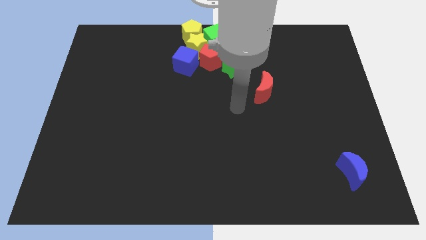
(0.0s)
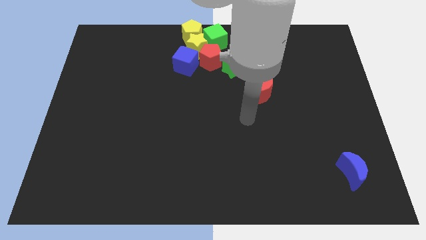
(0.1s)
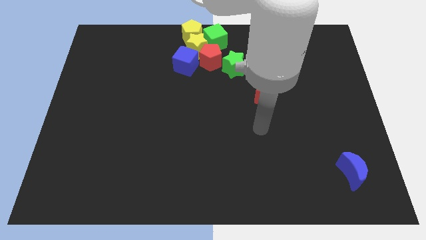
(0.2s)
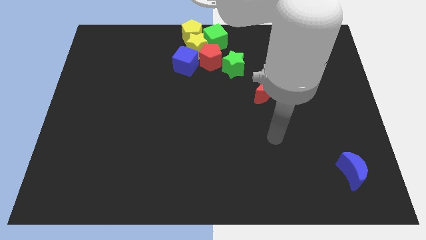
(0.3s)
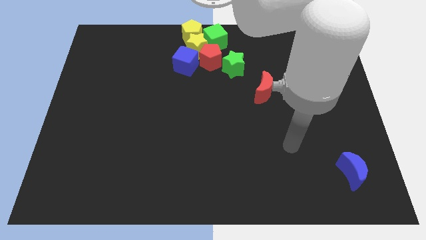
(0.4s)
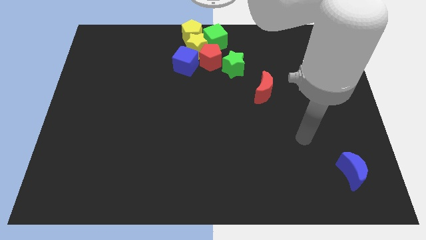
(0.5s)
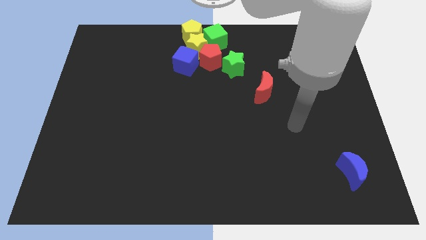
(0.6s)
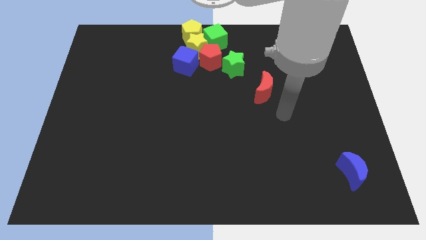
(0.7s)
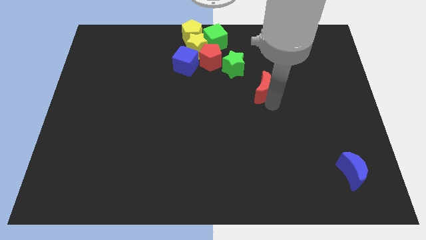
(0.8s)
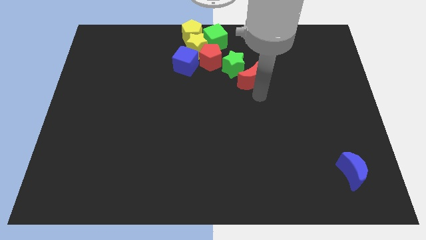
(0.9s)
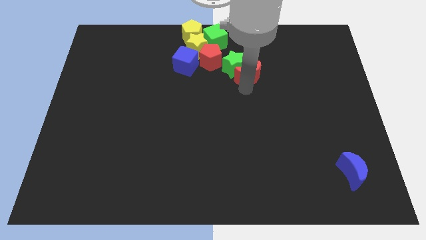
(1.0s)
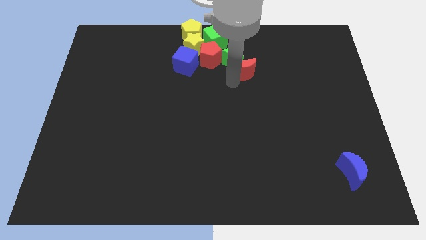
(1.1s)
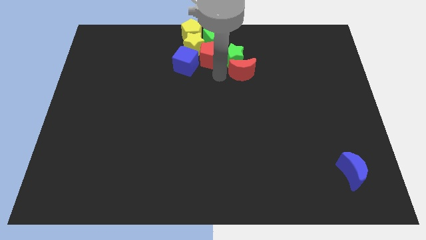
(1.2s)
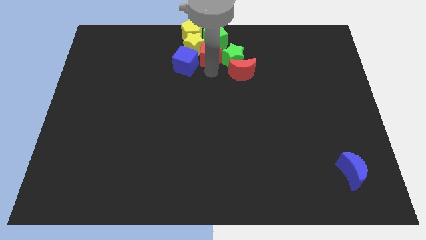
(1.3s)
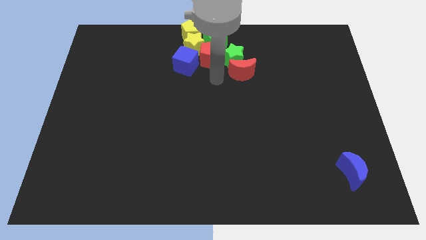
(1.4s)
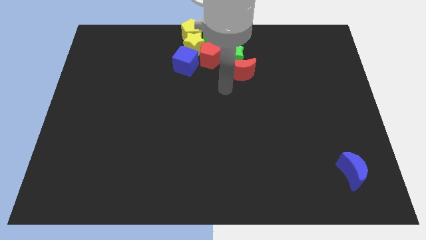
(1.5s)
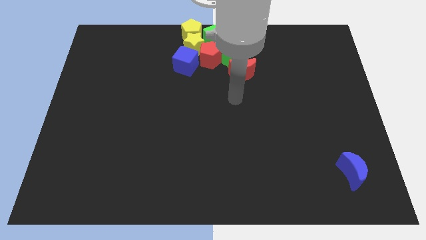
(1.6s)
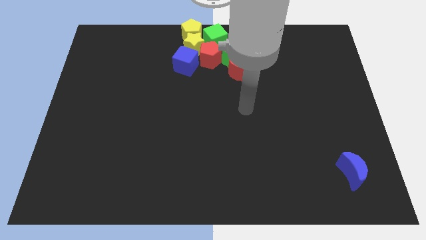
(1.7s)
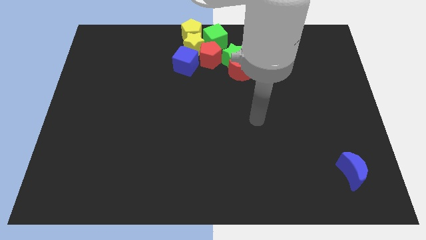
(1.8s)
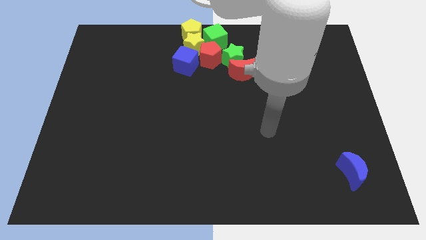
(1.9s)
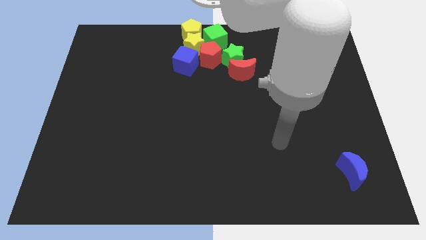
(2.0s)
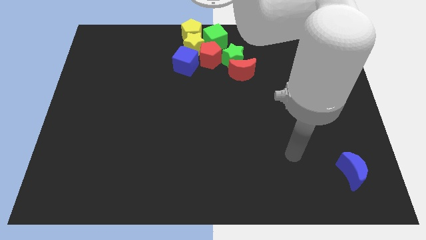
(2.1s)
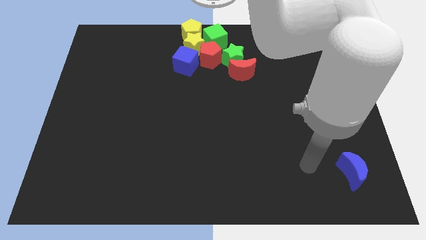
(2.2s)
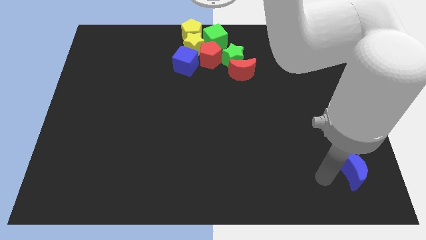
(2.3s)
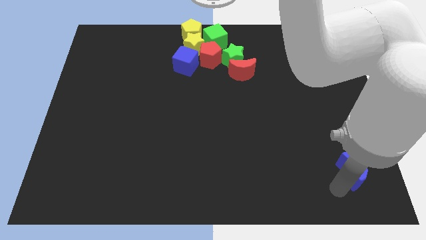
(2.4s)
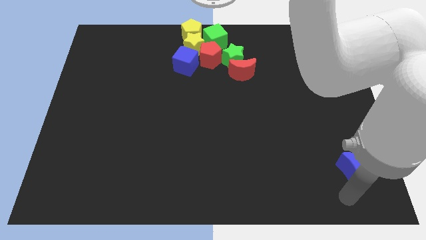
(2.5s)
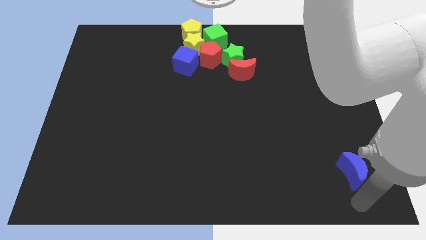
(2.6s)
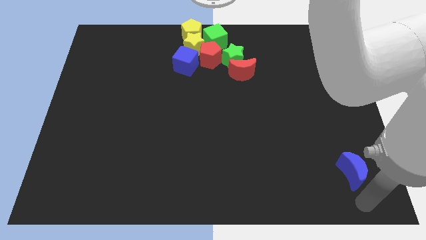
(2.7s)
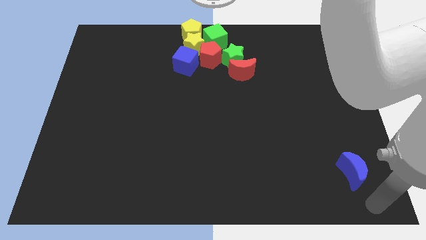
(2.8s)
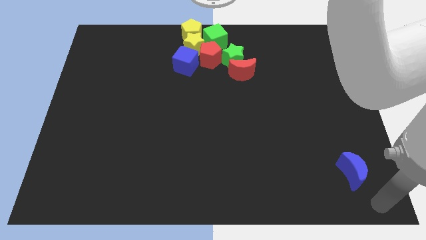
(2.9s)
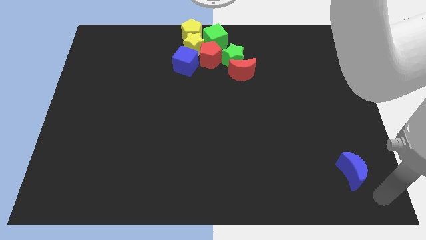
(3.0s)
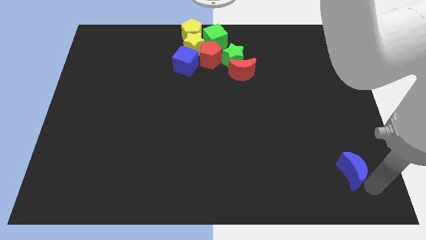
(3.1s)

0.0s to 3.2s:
move your arm towards the bottom right of the board

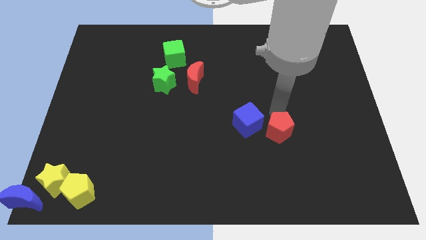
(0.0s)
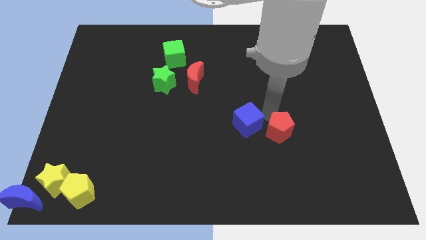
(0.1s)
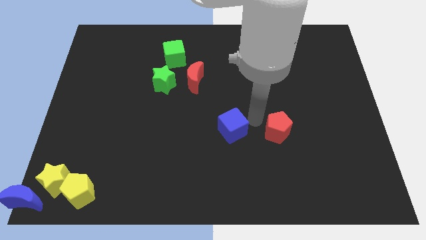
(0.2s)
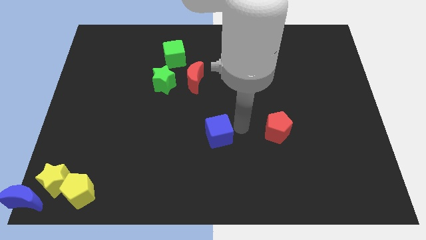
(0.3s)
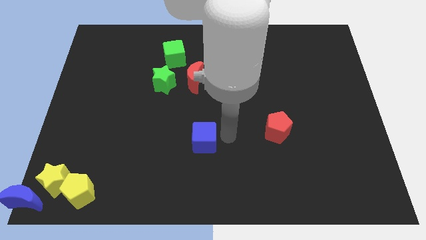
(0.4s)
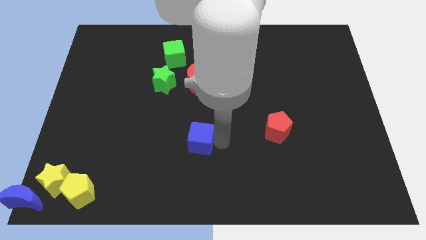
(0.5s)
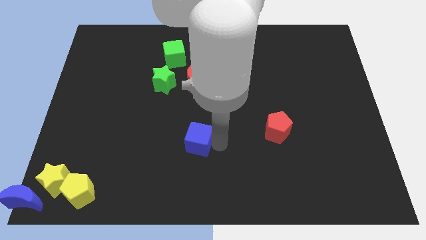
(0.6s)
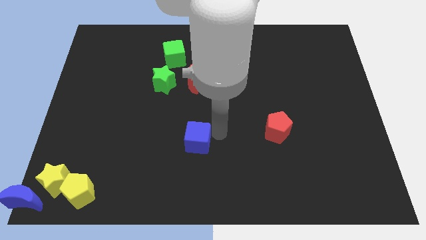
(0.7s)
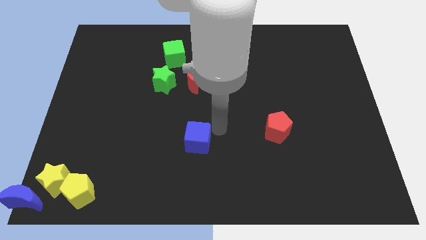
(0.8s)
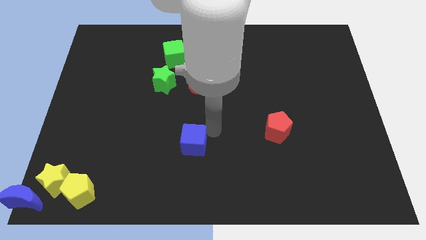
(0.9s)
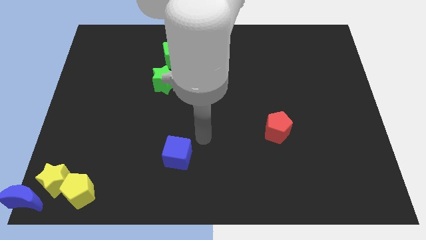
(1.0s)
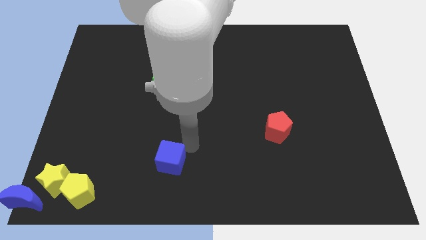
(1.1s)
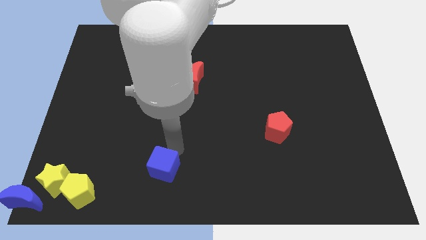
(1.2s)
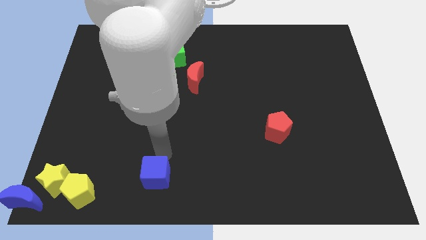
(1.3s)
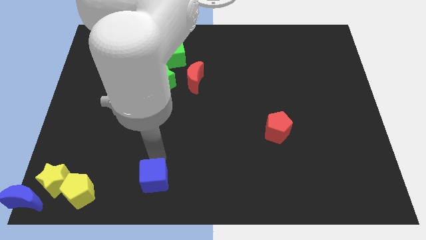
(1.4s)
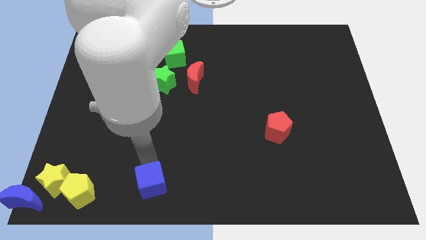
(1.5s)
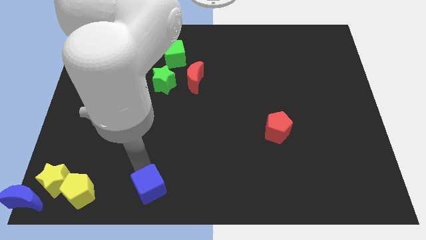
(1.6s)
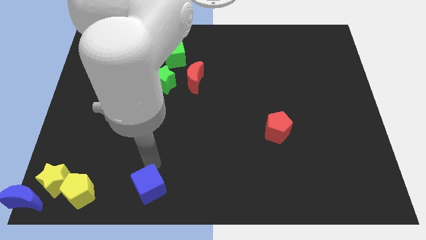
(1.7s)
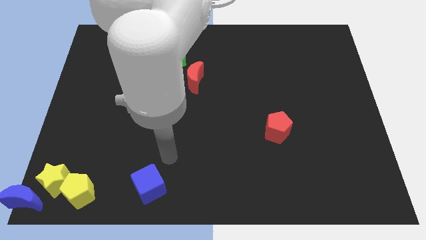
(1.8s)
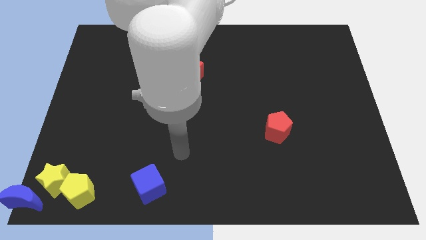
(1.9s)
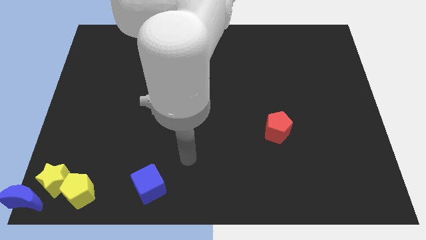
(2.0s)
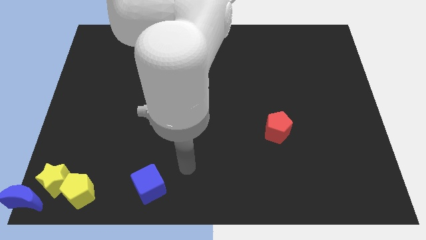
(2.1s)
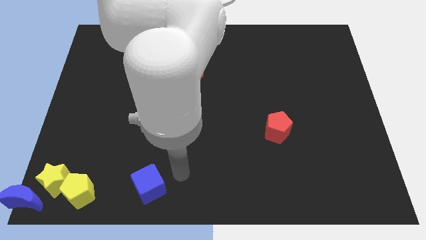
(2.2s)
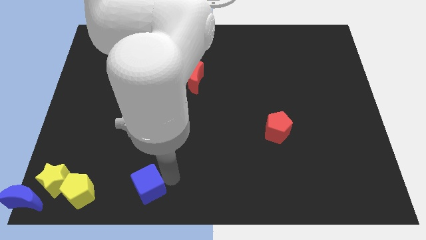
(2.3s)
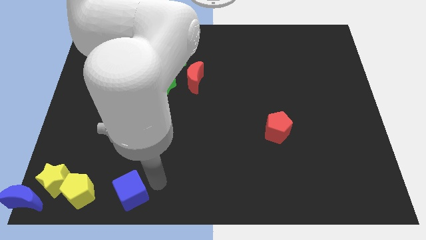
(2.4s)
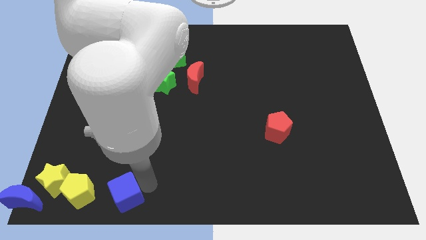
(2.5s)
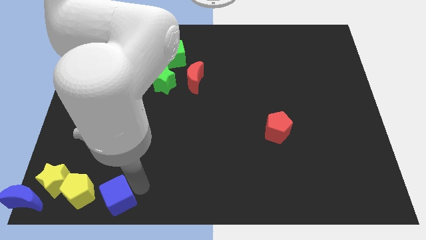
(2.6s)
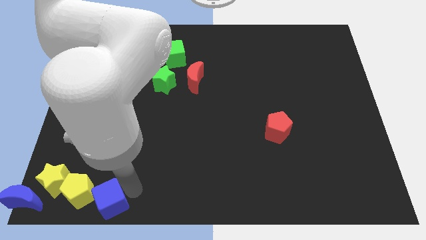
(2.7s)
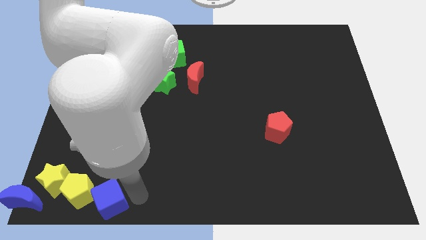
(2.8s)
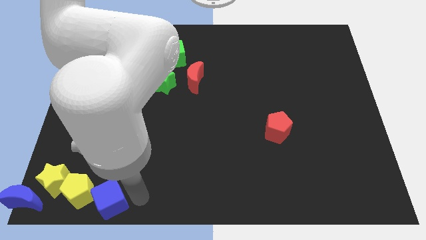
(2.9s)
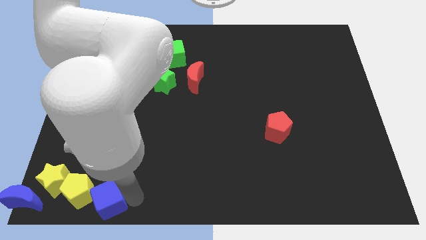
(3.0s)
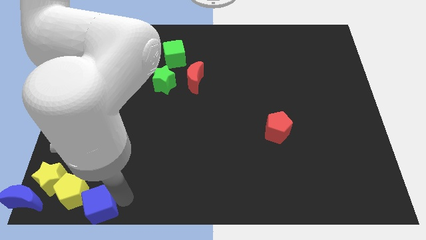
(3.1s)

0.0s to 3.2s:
push the blue cube to the bottom left of the board

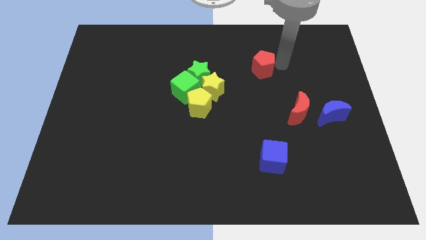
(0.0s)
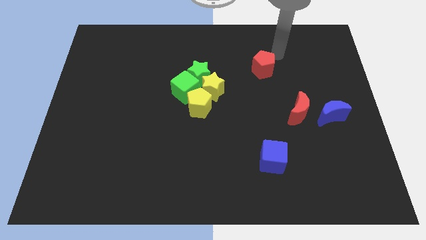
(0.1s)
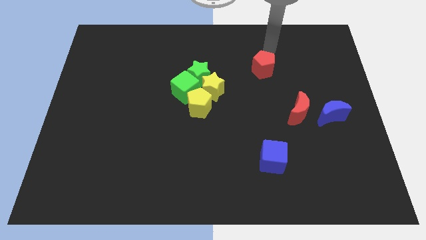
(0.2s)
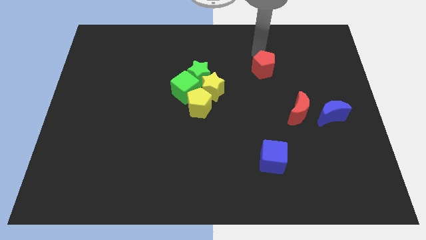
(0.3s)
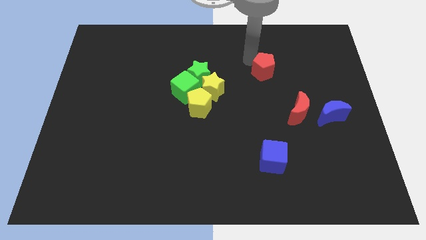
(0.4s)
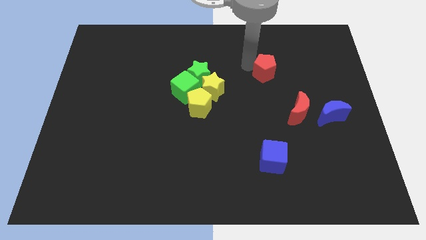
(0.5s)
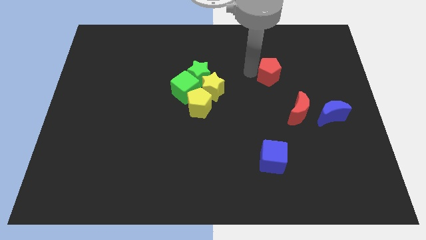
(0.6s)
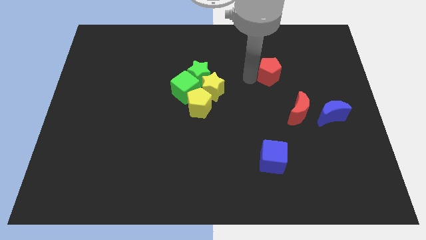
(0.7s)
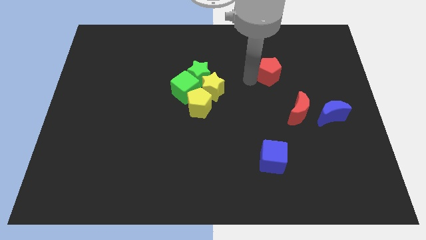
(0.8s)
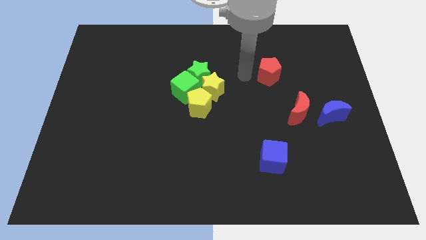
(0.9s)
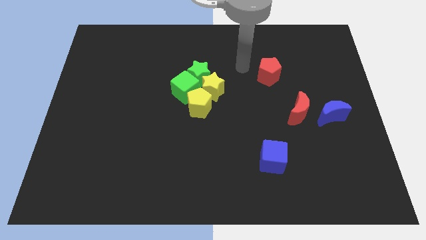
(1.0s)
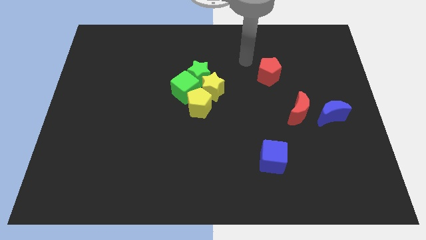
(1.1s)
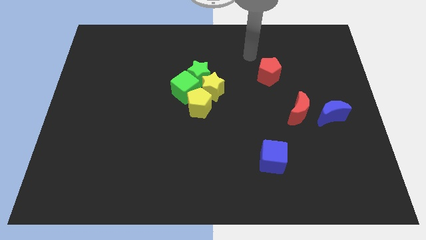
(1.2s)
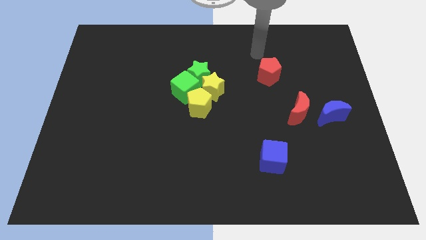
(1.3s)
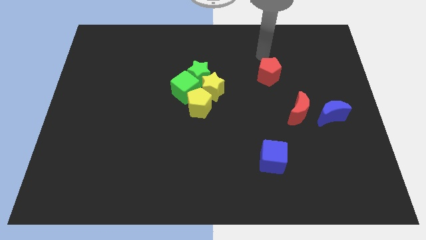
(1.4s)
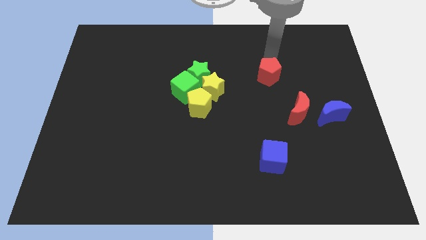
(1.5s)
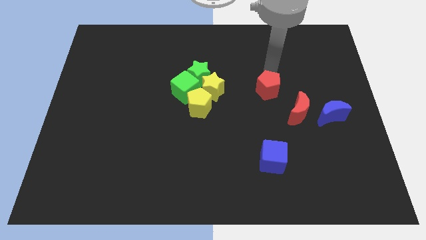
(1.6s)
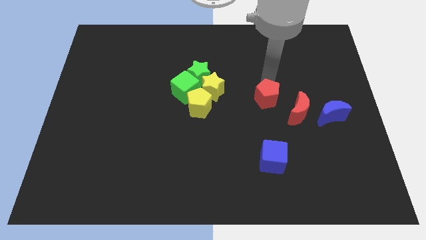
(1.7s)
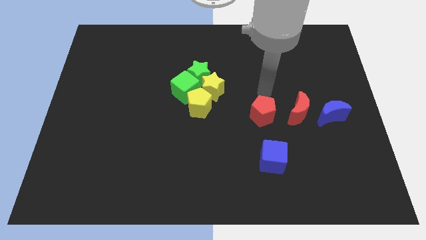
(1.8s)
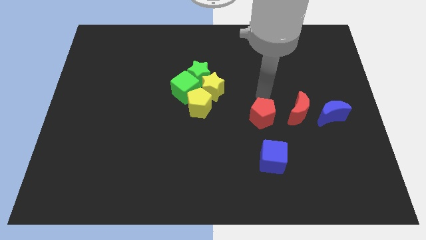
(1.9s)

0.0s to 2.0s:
push the red pentagon towards the bottom side

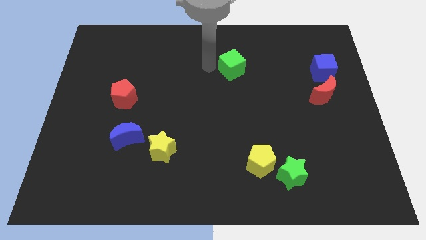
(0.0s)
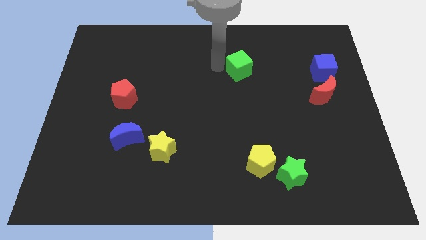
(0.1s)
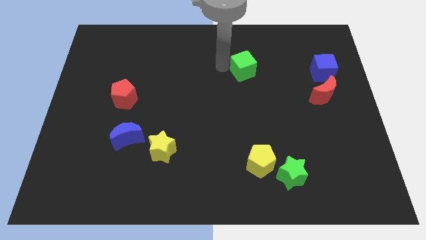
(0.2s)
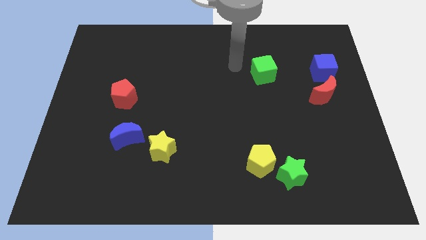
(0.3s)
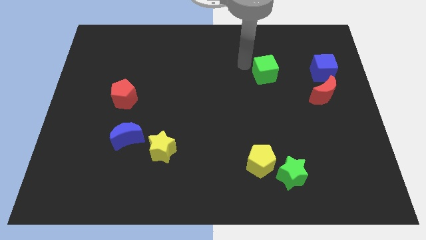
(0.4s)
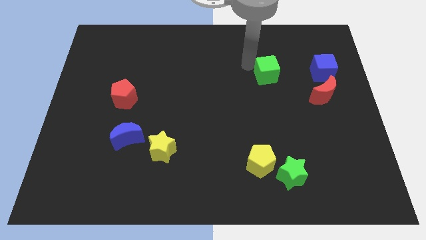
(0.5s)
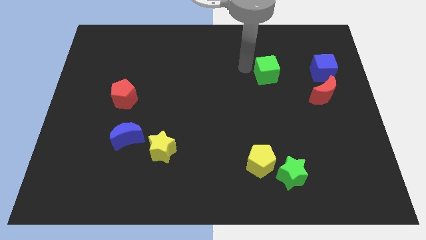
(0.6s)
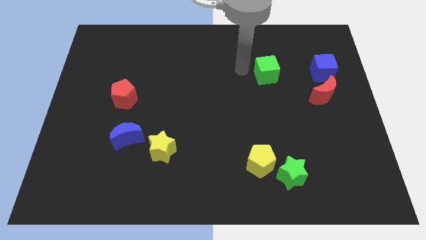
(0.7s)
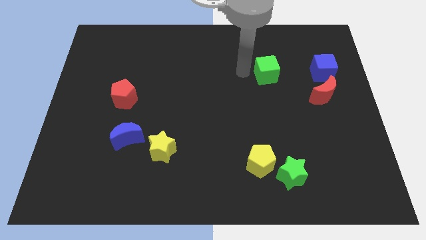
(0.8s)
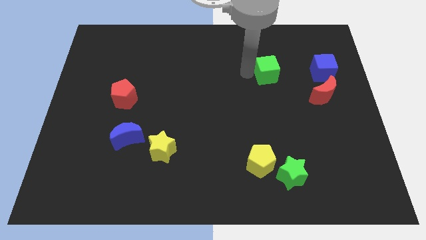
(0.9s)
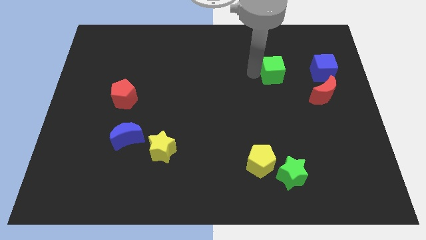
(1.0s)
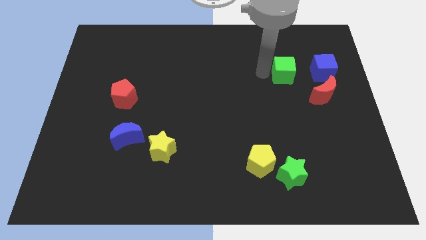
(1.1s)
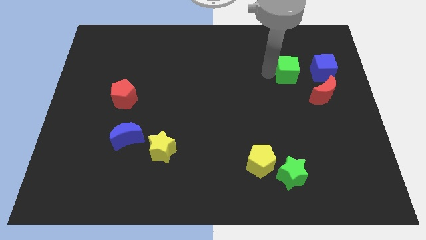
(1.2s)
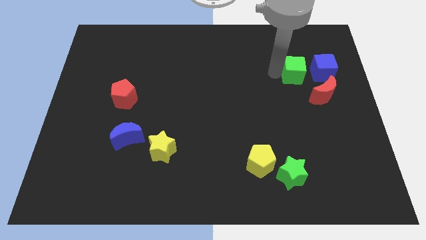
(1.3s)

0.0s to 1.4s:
slide the green cube towards the blue cube
